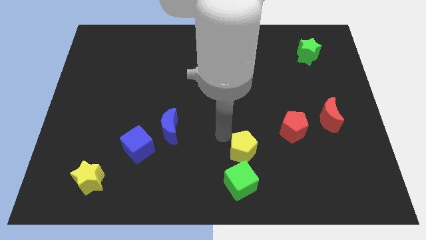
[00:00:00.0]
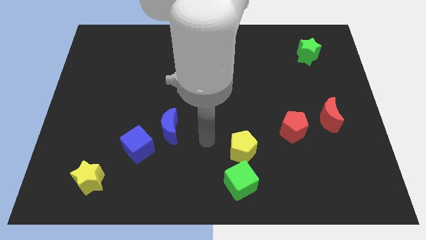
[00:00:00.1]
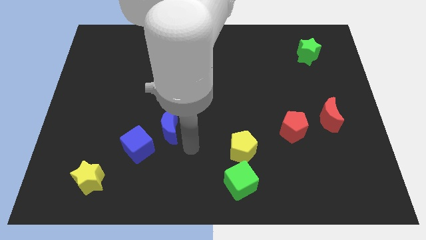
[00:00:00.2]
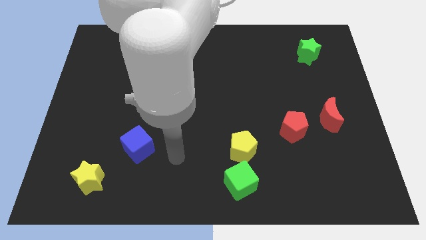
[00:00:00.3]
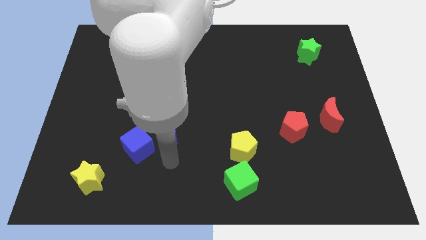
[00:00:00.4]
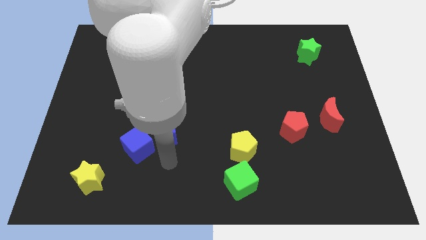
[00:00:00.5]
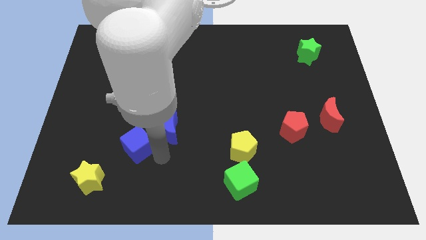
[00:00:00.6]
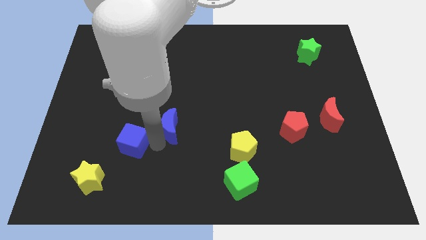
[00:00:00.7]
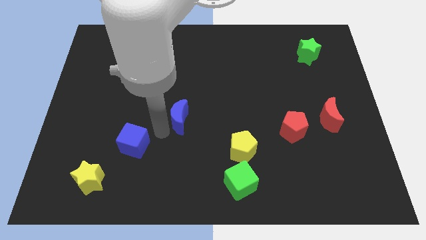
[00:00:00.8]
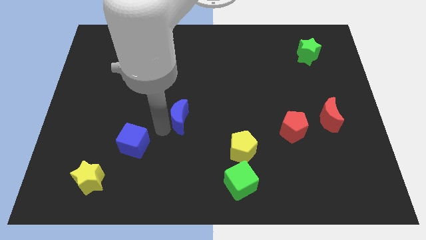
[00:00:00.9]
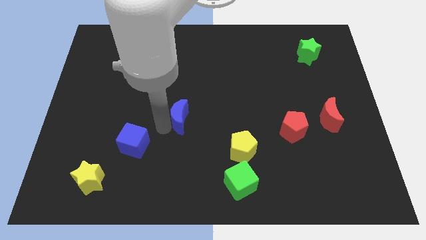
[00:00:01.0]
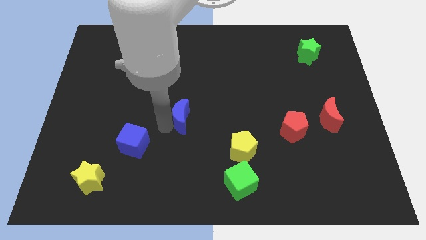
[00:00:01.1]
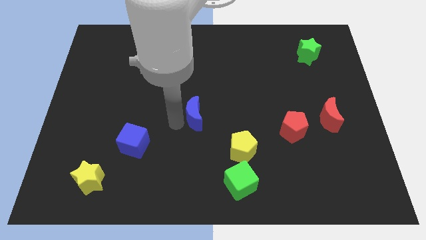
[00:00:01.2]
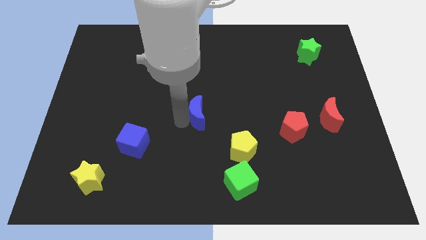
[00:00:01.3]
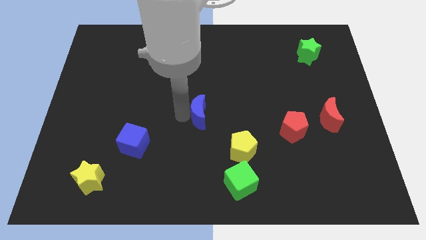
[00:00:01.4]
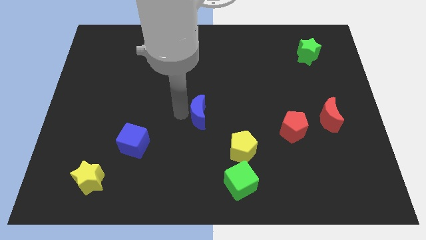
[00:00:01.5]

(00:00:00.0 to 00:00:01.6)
slide the blue moon to the center of the blue moon

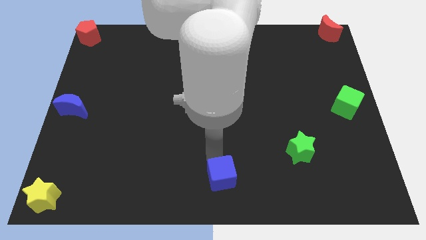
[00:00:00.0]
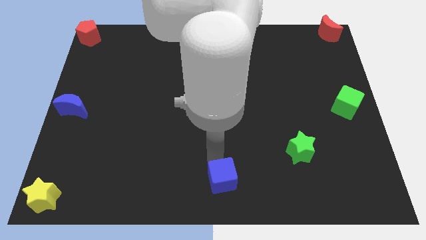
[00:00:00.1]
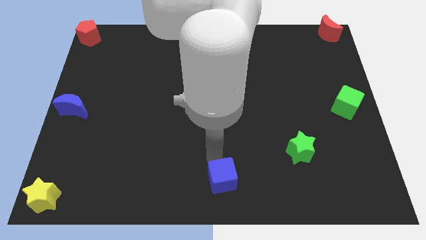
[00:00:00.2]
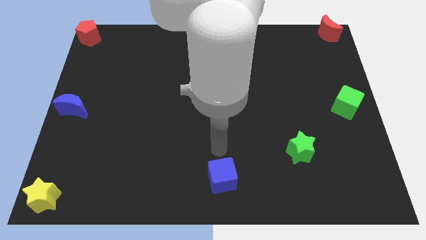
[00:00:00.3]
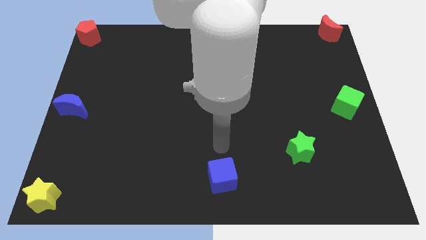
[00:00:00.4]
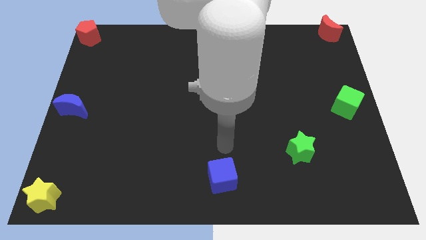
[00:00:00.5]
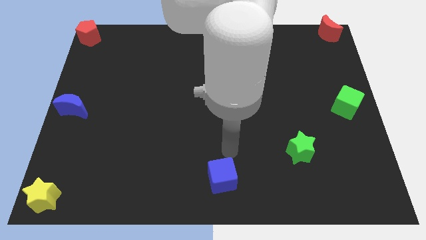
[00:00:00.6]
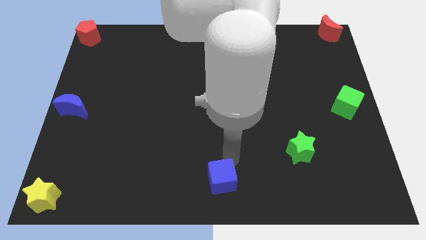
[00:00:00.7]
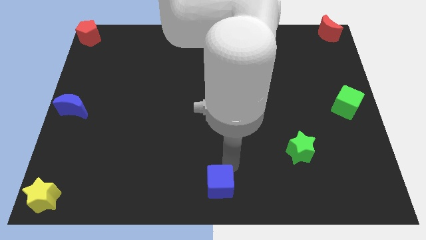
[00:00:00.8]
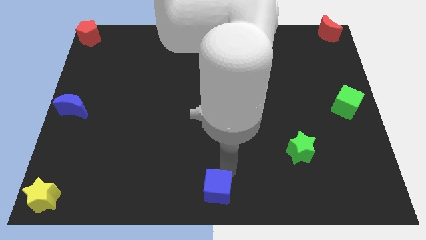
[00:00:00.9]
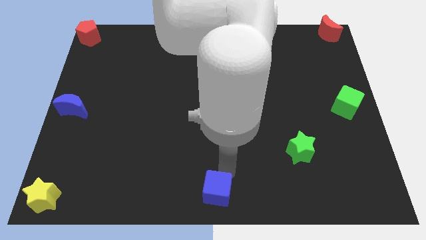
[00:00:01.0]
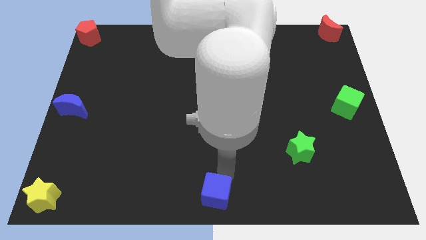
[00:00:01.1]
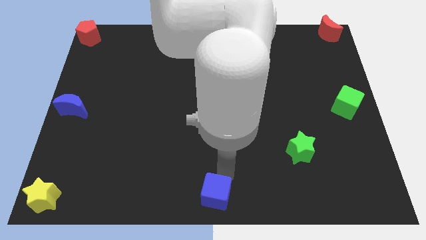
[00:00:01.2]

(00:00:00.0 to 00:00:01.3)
move the blue cube towards the bottom center of the board

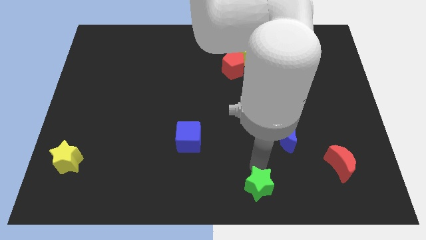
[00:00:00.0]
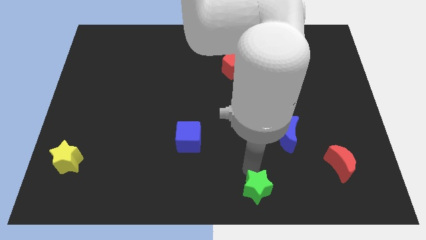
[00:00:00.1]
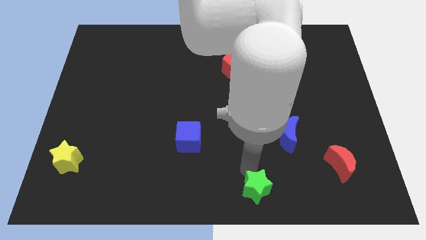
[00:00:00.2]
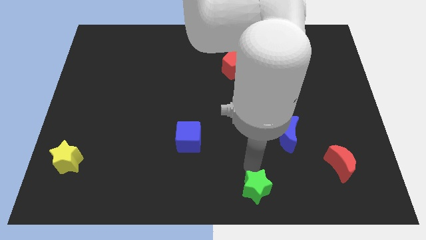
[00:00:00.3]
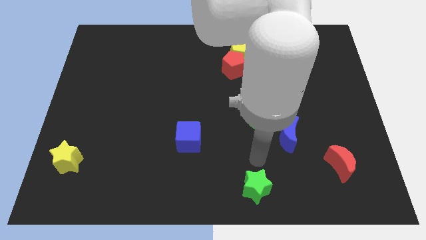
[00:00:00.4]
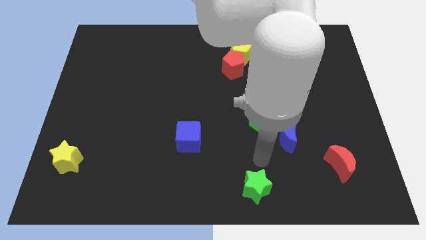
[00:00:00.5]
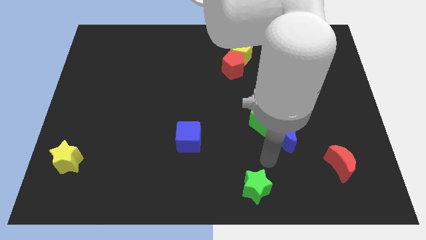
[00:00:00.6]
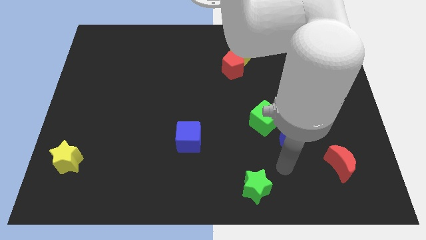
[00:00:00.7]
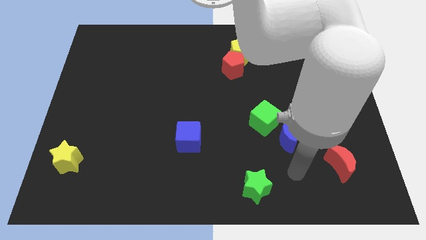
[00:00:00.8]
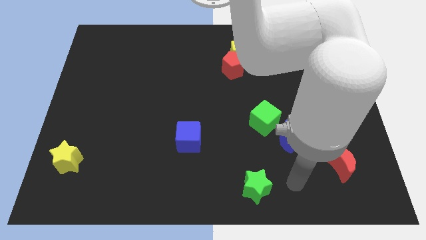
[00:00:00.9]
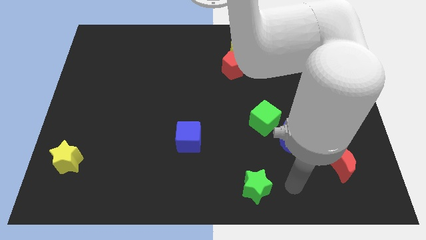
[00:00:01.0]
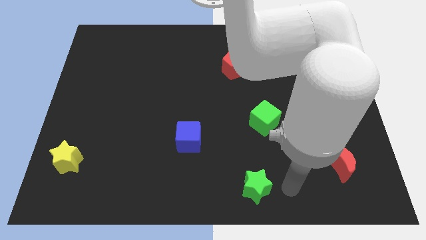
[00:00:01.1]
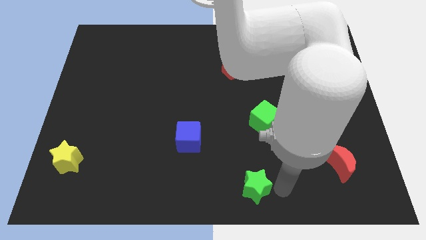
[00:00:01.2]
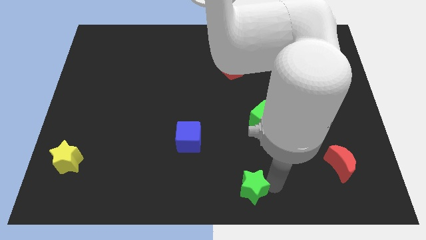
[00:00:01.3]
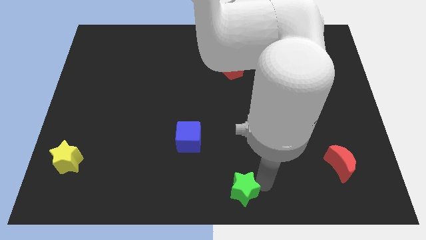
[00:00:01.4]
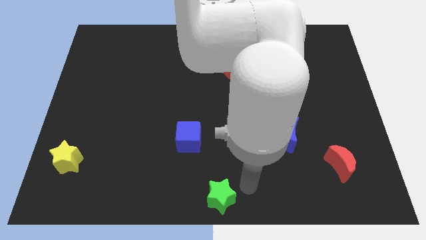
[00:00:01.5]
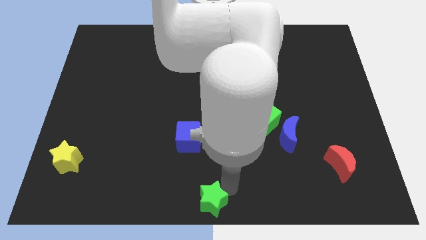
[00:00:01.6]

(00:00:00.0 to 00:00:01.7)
place the green star at the bottom center of the board

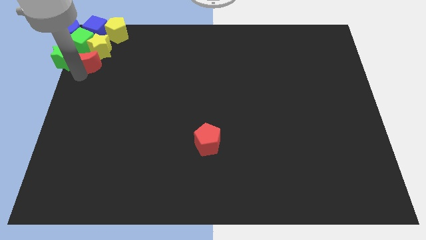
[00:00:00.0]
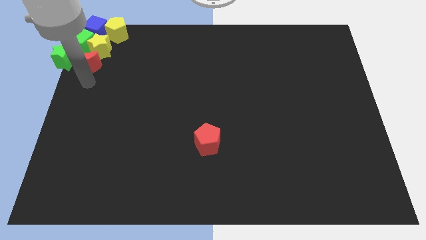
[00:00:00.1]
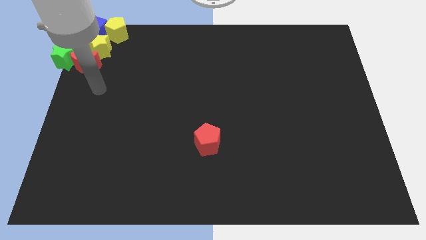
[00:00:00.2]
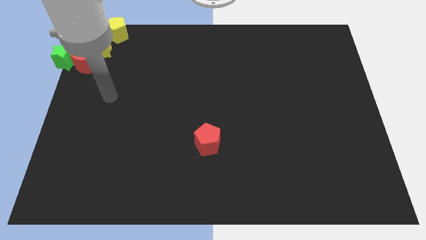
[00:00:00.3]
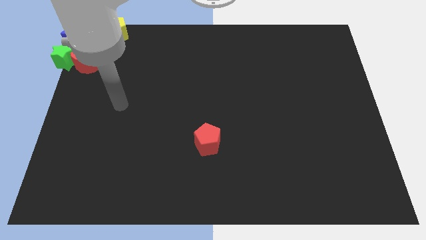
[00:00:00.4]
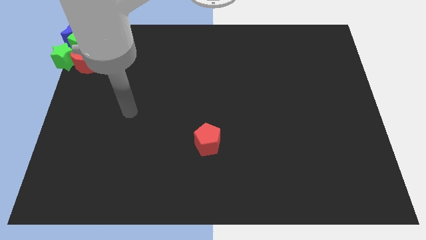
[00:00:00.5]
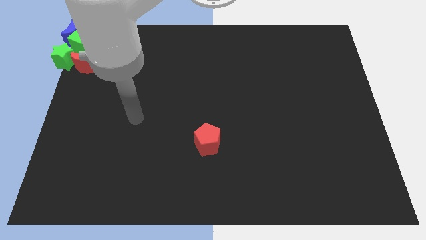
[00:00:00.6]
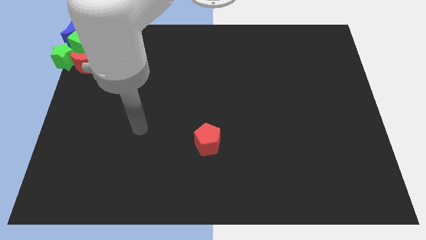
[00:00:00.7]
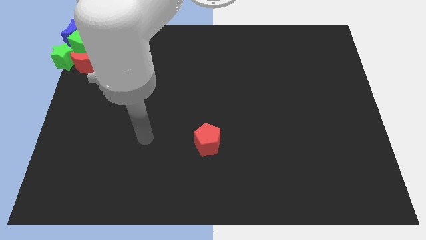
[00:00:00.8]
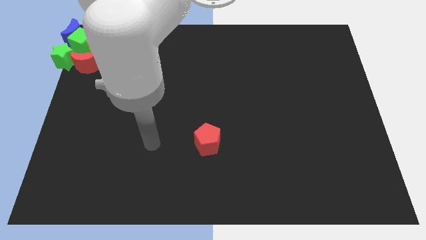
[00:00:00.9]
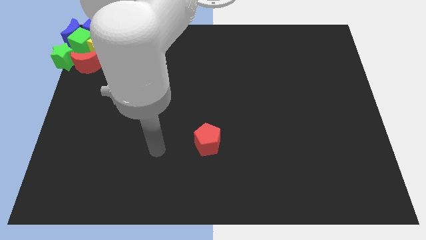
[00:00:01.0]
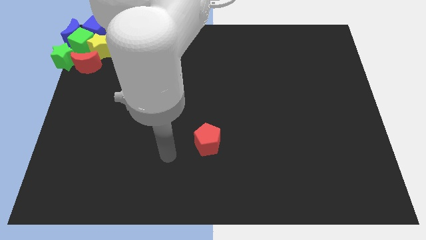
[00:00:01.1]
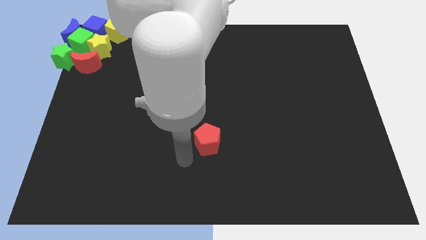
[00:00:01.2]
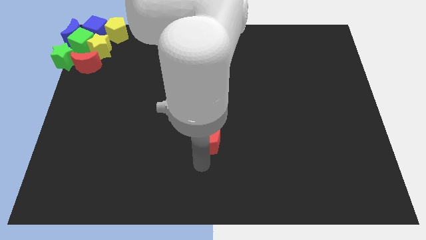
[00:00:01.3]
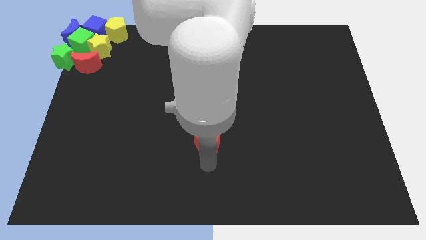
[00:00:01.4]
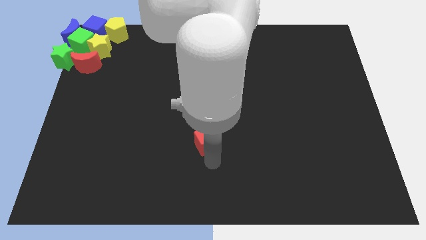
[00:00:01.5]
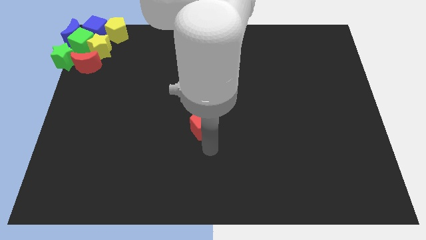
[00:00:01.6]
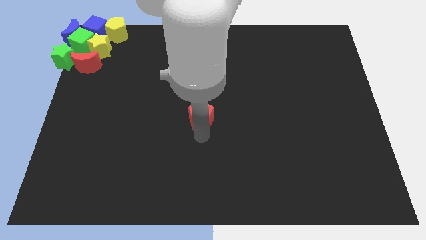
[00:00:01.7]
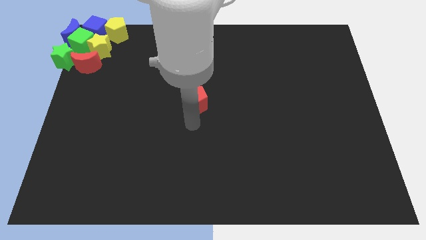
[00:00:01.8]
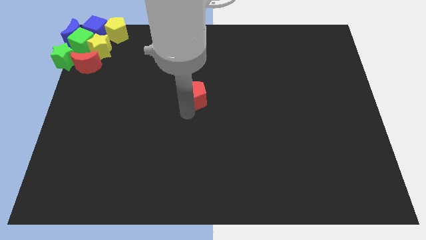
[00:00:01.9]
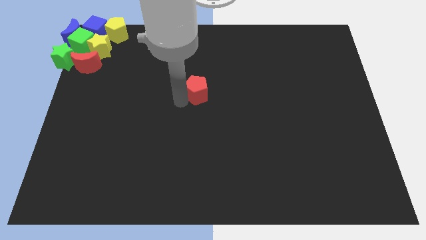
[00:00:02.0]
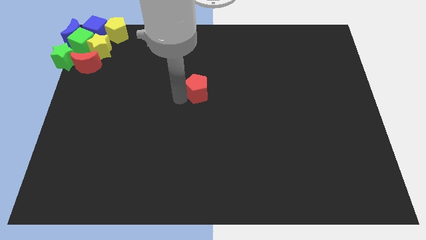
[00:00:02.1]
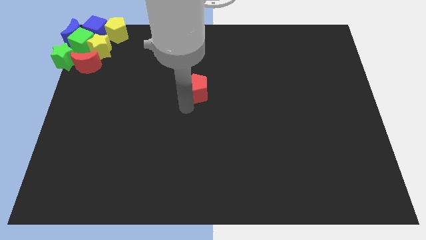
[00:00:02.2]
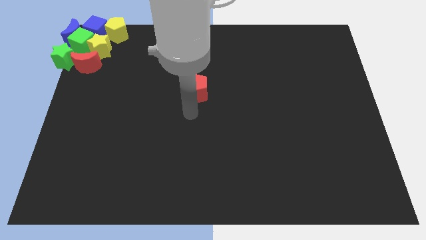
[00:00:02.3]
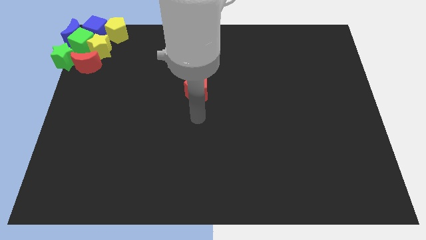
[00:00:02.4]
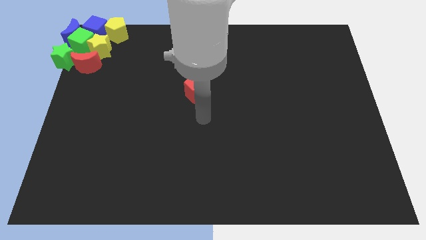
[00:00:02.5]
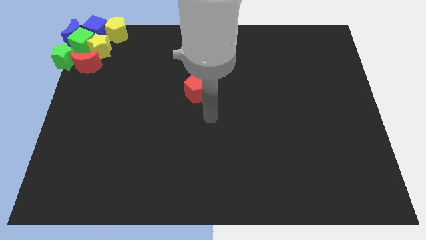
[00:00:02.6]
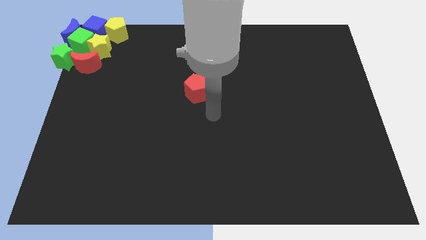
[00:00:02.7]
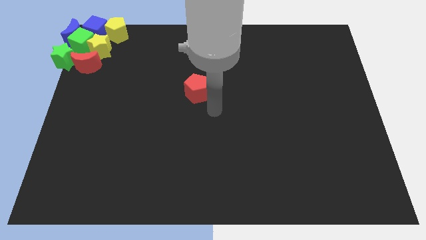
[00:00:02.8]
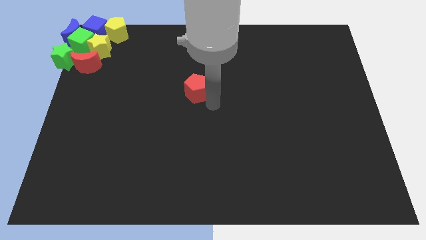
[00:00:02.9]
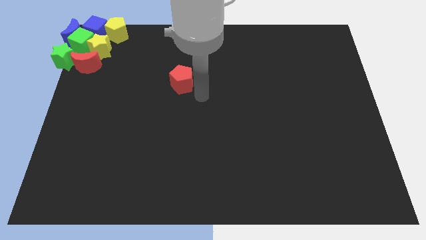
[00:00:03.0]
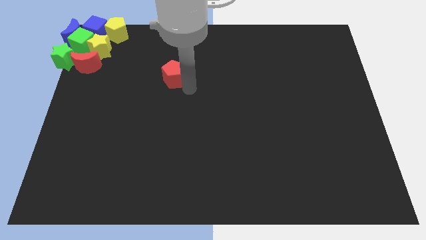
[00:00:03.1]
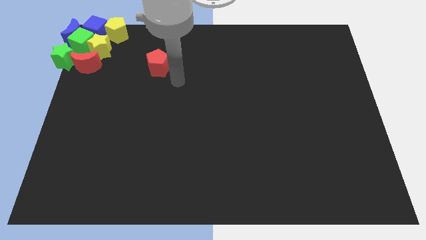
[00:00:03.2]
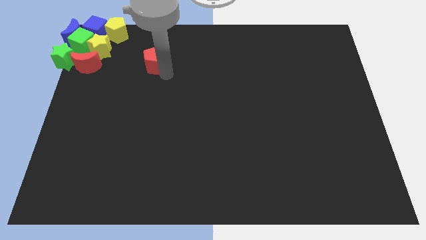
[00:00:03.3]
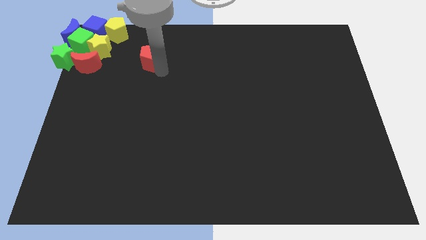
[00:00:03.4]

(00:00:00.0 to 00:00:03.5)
push the red pentagon towards the group of blocks

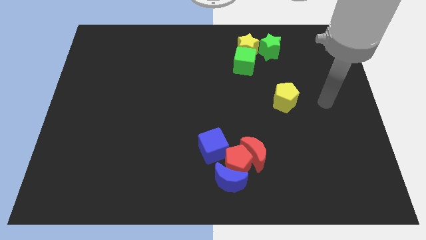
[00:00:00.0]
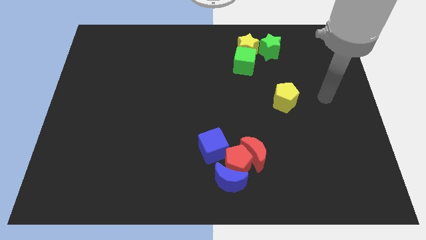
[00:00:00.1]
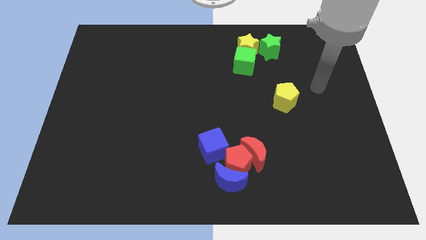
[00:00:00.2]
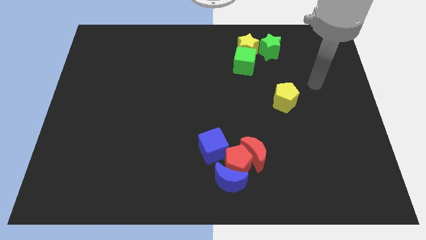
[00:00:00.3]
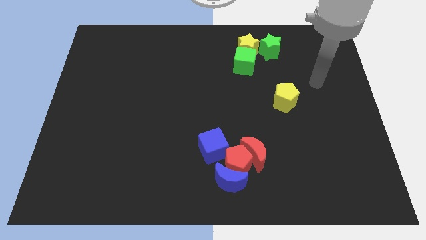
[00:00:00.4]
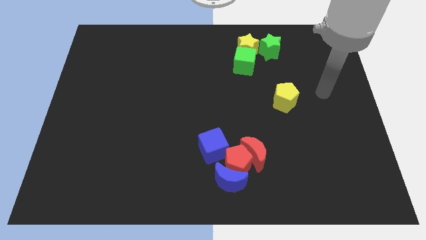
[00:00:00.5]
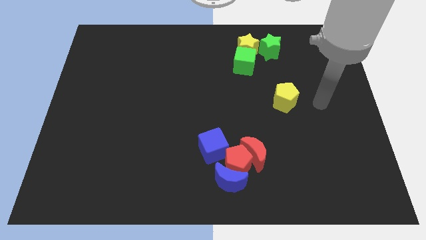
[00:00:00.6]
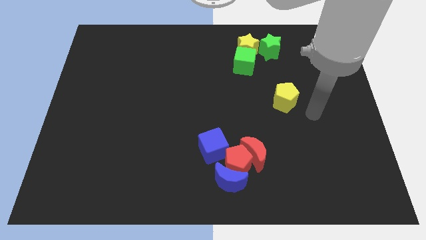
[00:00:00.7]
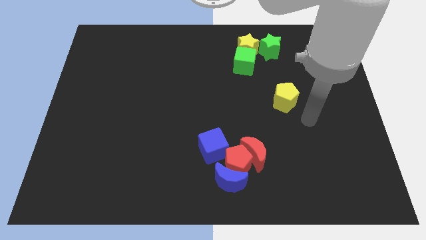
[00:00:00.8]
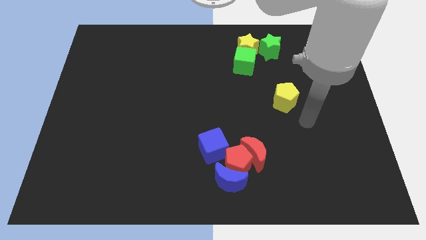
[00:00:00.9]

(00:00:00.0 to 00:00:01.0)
move your arm to the bottom right side of the yellow pentagon
